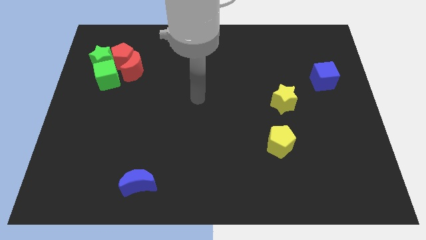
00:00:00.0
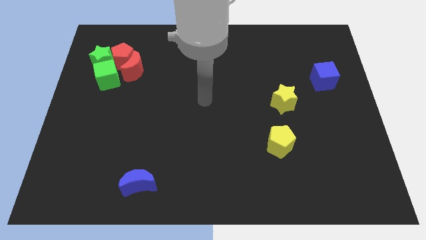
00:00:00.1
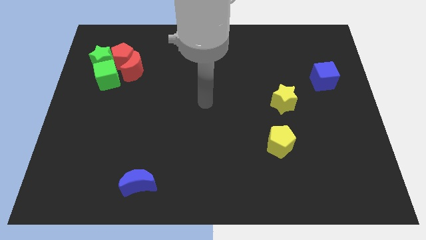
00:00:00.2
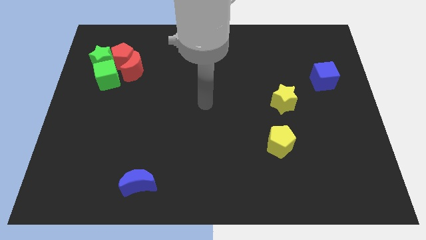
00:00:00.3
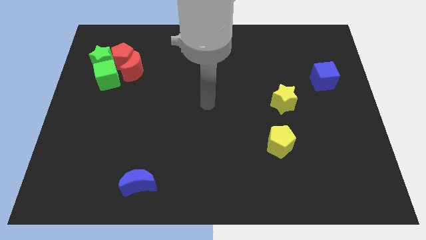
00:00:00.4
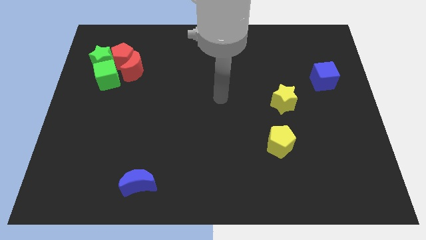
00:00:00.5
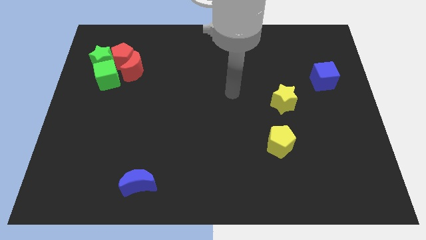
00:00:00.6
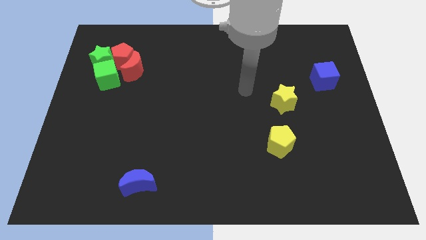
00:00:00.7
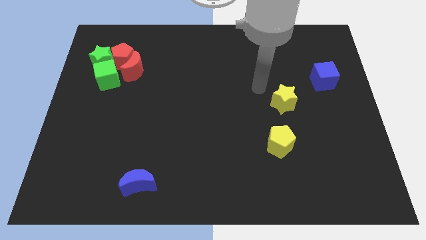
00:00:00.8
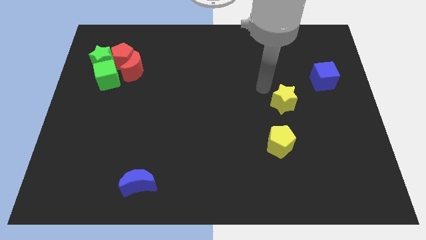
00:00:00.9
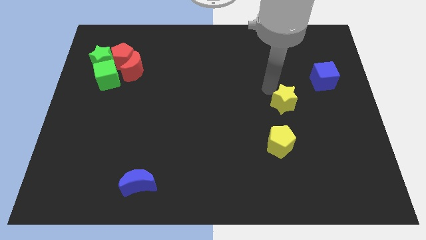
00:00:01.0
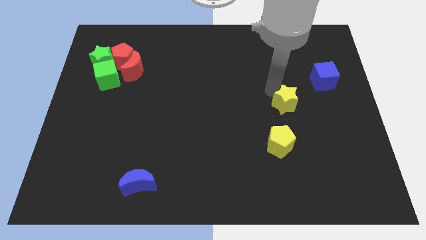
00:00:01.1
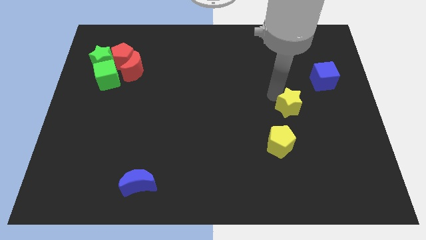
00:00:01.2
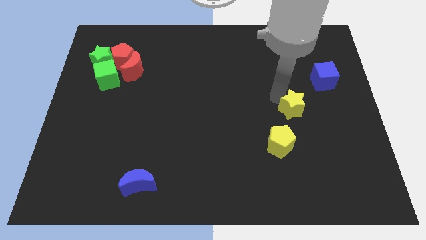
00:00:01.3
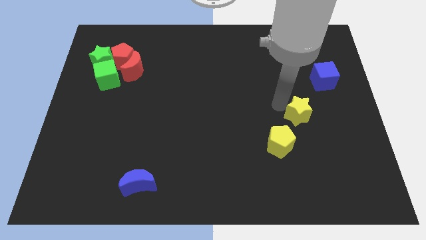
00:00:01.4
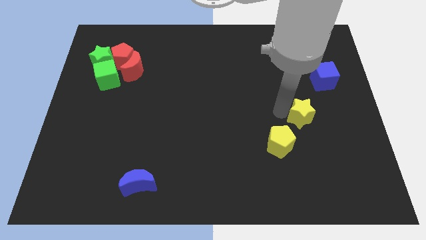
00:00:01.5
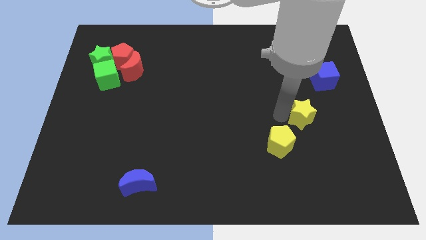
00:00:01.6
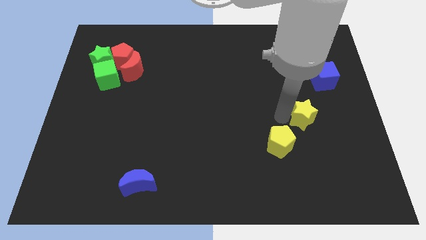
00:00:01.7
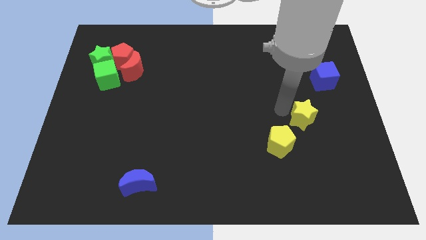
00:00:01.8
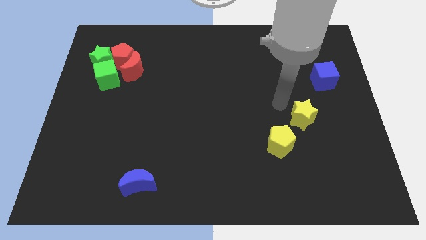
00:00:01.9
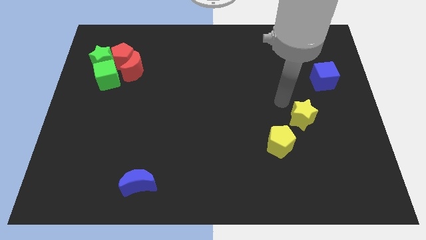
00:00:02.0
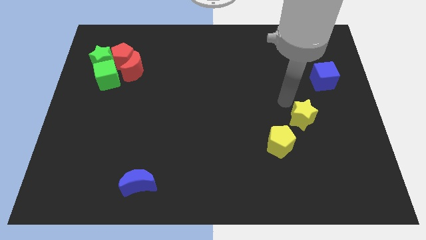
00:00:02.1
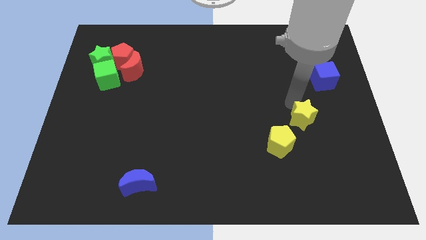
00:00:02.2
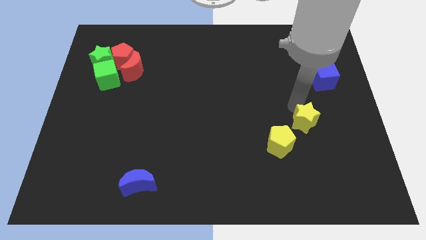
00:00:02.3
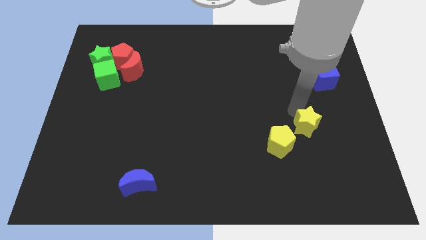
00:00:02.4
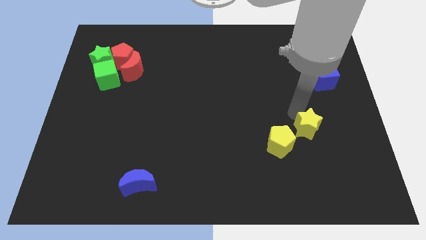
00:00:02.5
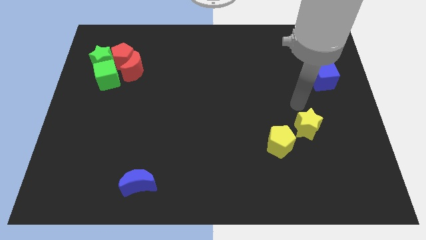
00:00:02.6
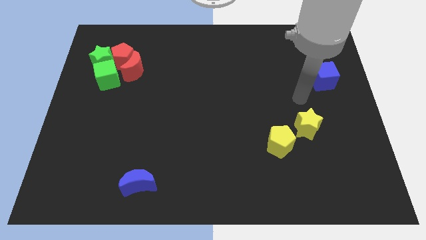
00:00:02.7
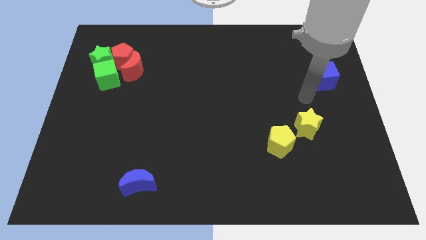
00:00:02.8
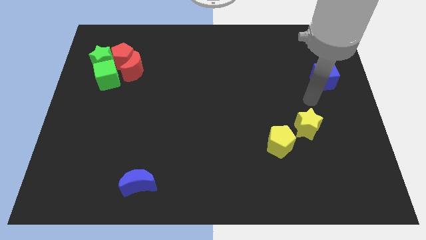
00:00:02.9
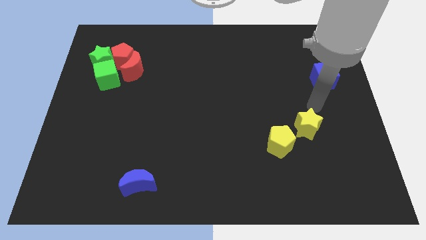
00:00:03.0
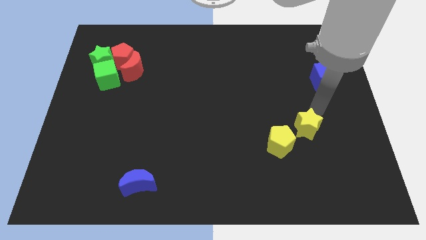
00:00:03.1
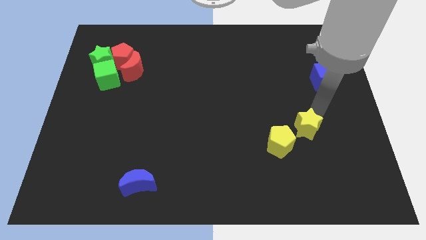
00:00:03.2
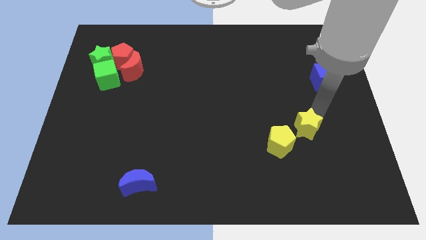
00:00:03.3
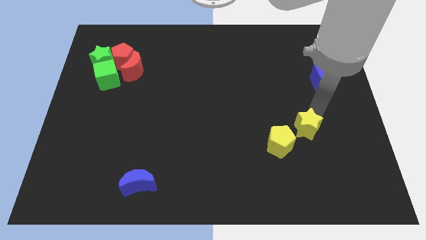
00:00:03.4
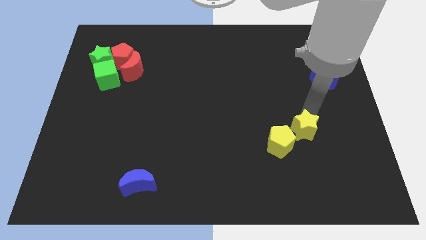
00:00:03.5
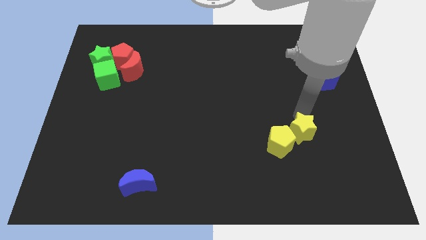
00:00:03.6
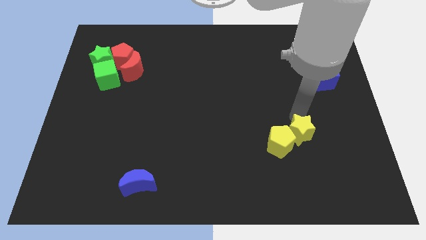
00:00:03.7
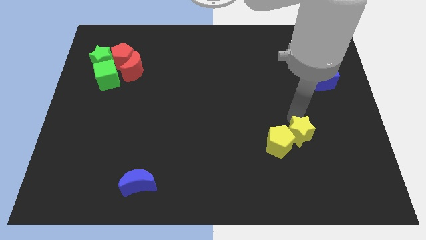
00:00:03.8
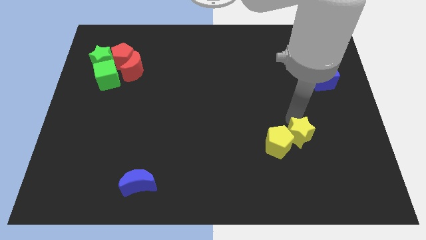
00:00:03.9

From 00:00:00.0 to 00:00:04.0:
move the yellow star into the yellow pentagon

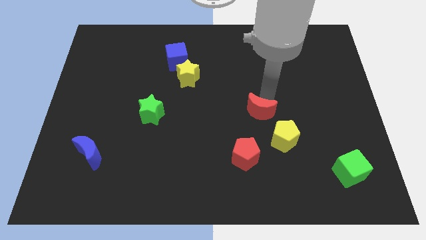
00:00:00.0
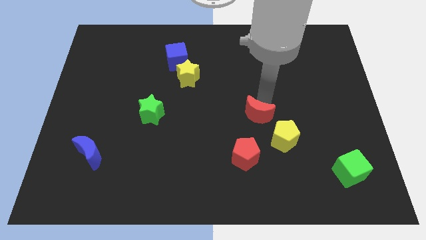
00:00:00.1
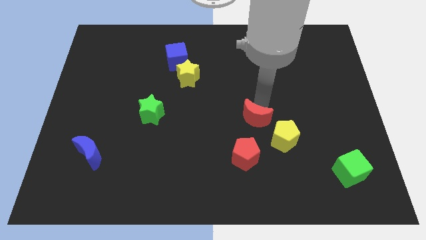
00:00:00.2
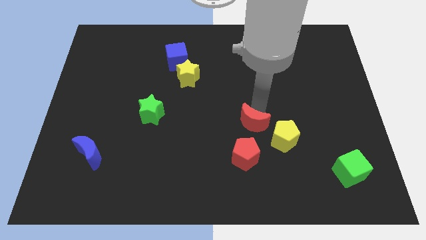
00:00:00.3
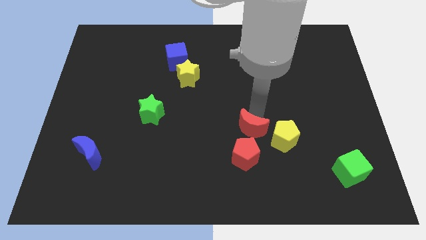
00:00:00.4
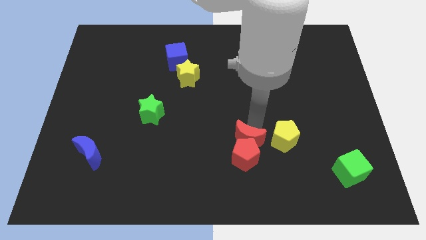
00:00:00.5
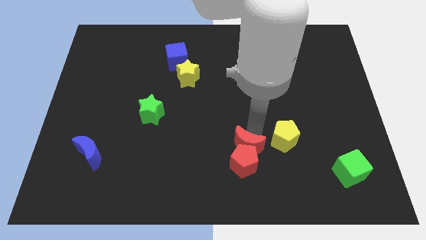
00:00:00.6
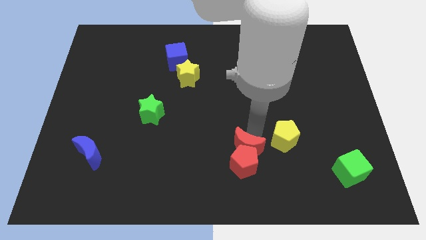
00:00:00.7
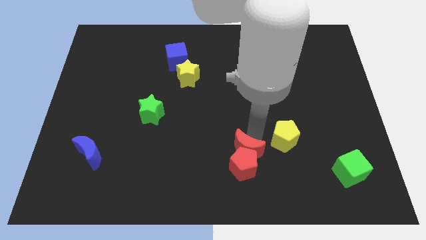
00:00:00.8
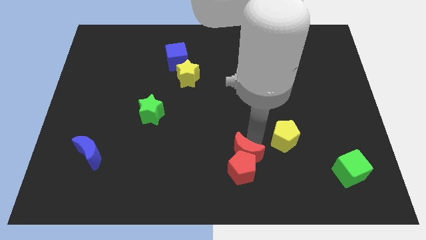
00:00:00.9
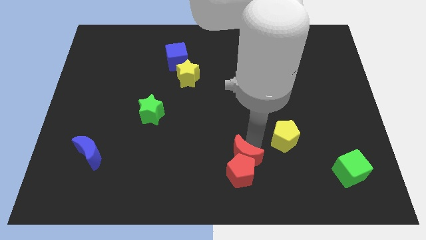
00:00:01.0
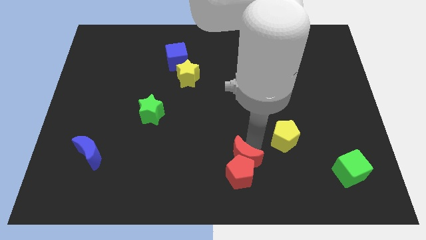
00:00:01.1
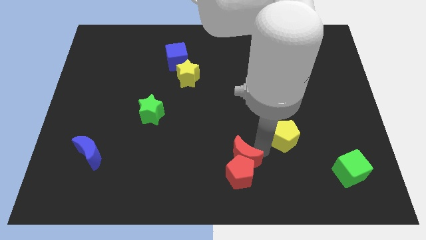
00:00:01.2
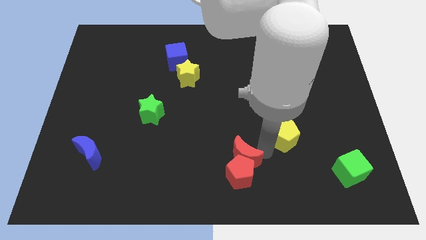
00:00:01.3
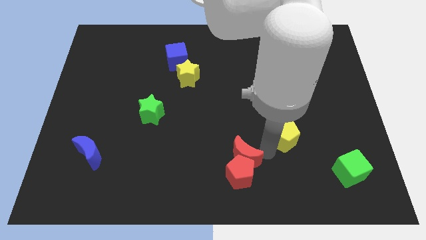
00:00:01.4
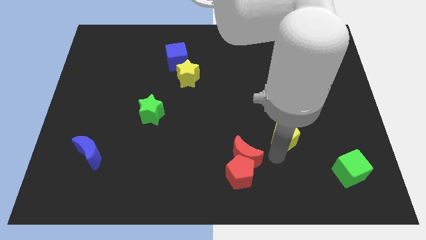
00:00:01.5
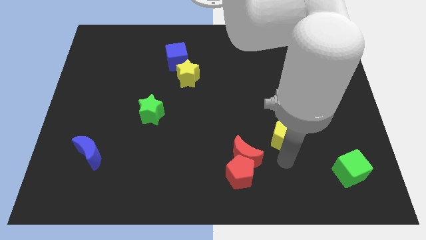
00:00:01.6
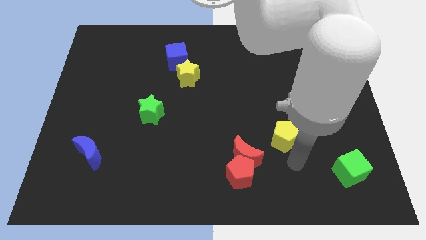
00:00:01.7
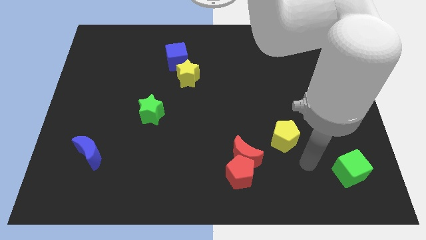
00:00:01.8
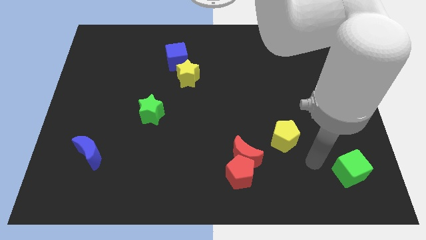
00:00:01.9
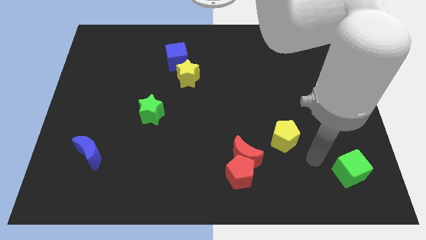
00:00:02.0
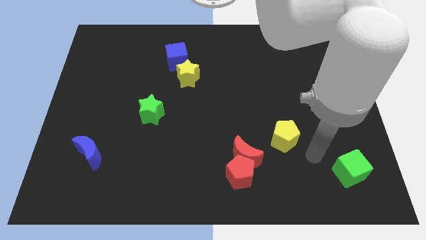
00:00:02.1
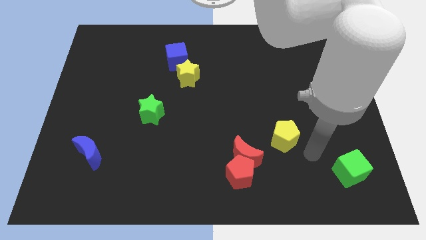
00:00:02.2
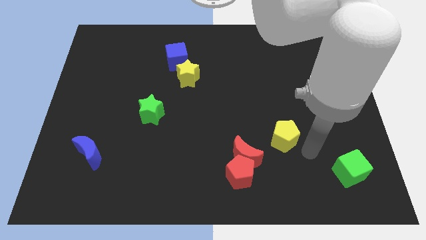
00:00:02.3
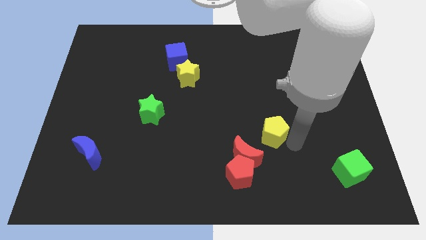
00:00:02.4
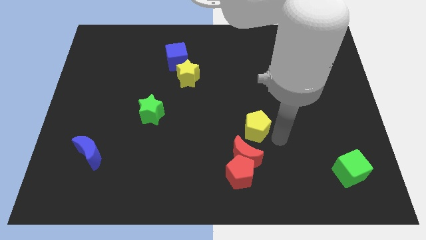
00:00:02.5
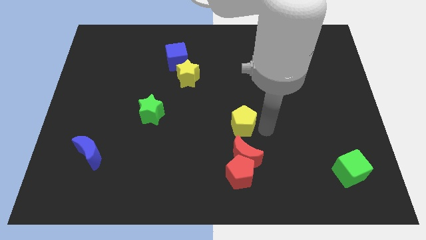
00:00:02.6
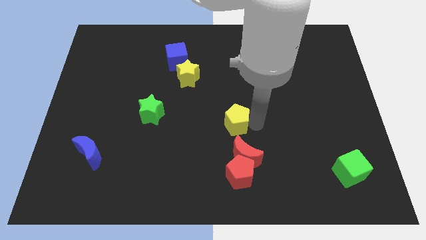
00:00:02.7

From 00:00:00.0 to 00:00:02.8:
place the yellow pentagon above the red moon

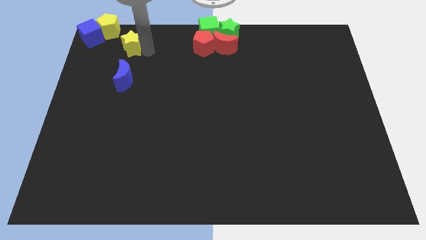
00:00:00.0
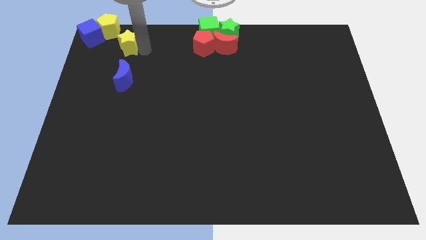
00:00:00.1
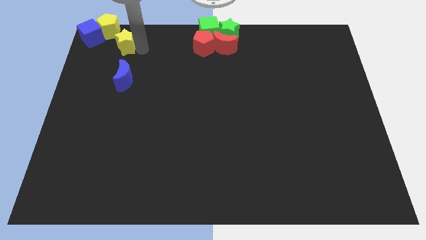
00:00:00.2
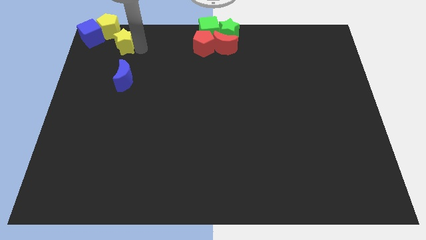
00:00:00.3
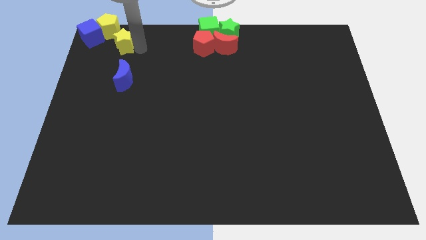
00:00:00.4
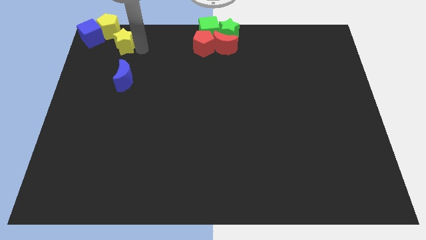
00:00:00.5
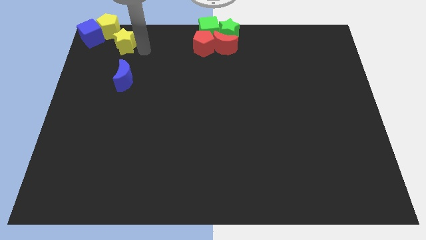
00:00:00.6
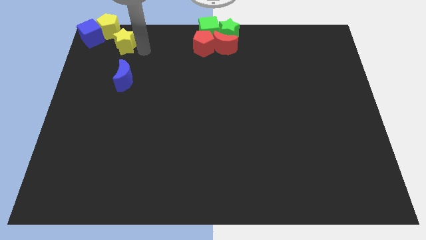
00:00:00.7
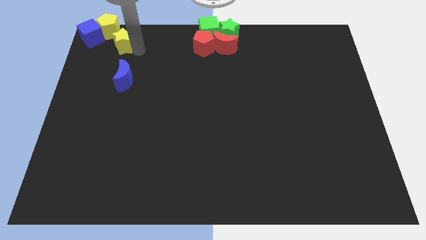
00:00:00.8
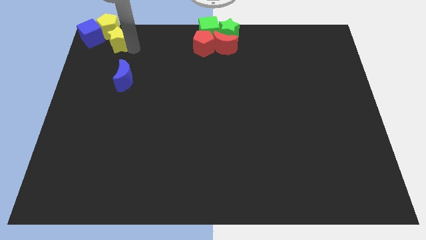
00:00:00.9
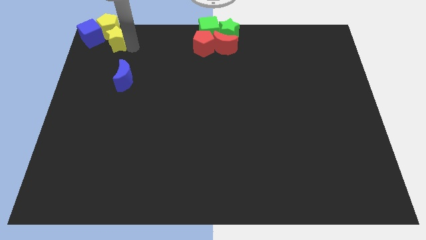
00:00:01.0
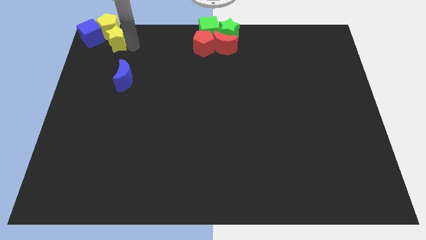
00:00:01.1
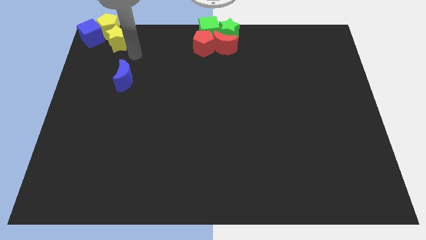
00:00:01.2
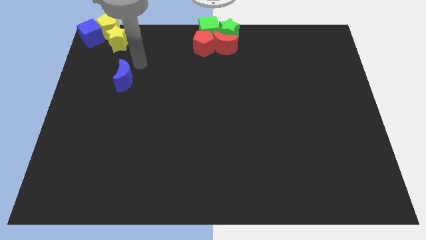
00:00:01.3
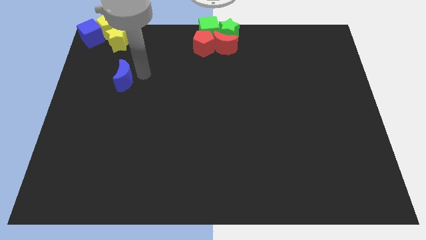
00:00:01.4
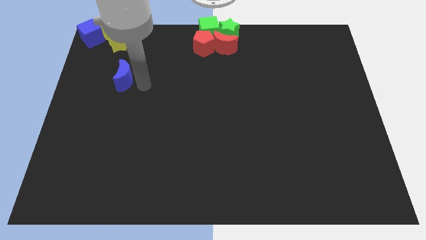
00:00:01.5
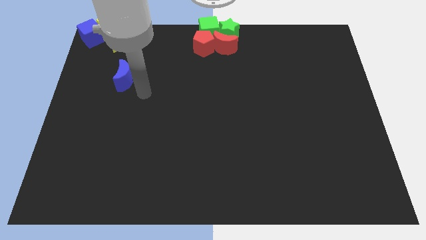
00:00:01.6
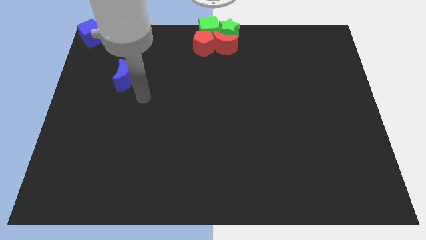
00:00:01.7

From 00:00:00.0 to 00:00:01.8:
move the yellow star close to yellow pentagon

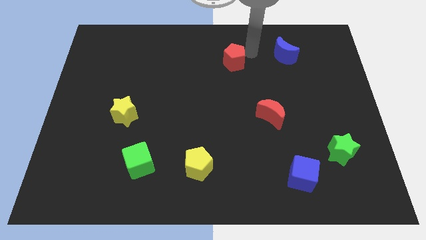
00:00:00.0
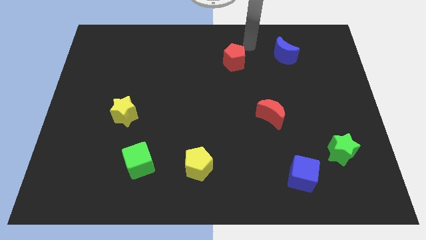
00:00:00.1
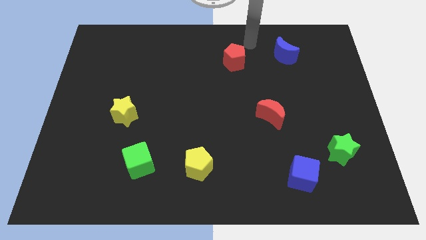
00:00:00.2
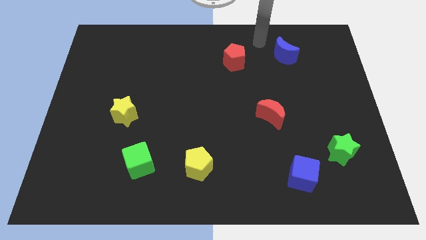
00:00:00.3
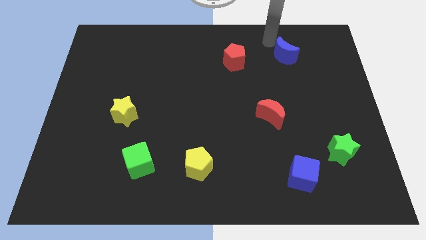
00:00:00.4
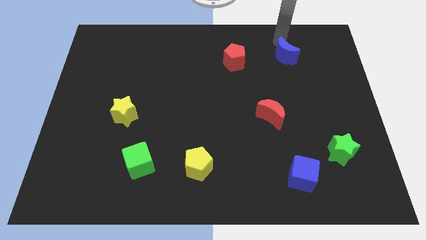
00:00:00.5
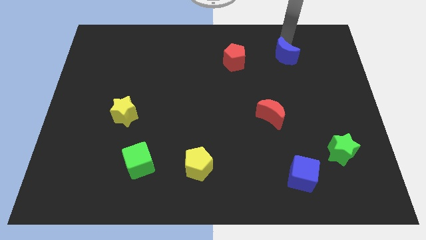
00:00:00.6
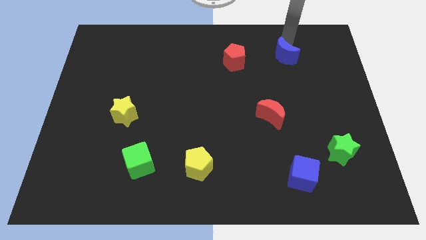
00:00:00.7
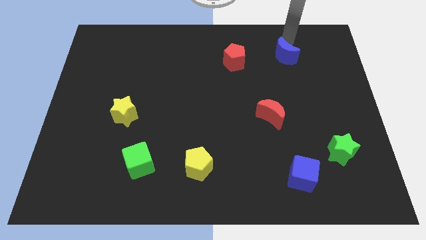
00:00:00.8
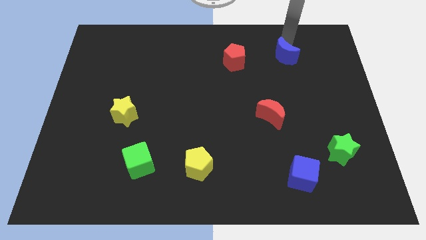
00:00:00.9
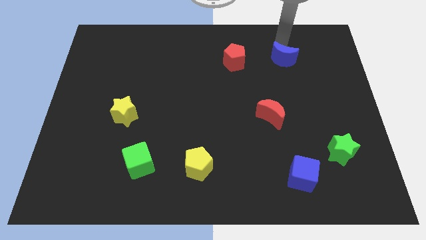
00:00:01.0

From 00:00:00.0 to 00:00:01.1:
move arm to the blue moon
